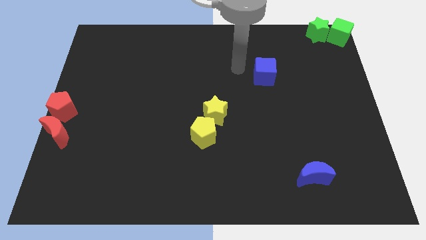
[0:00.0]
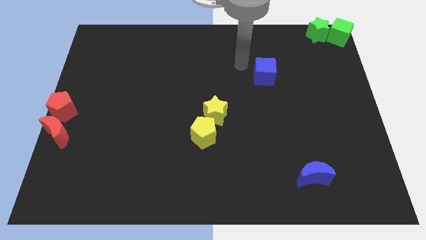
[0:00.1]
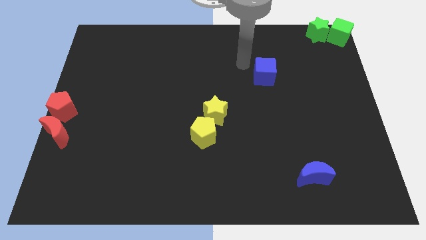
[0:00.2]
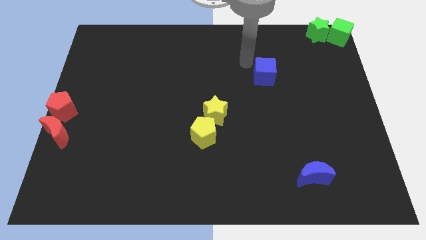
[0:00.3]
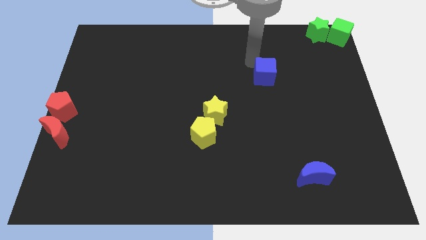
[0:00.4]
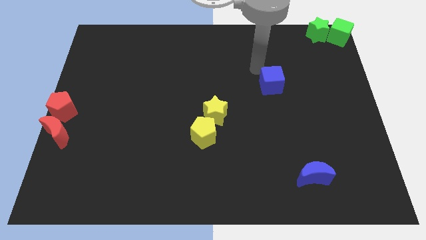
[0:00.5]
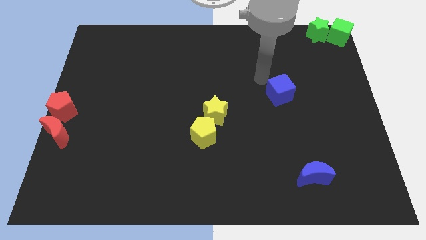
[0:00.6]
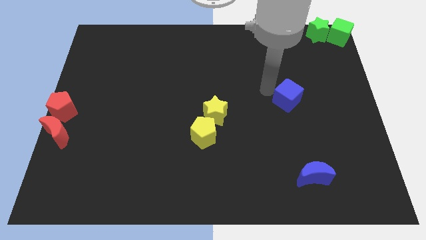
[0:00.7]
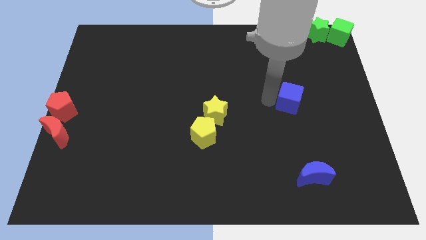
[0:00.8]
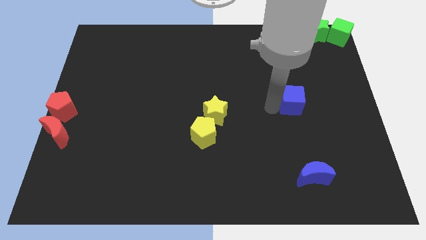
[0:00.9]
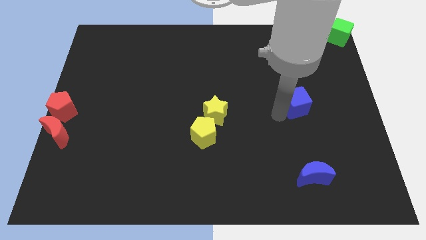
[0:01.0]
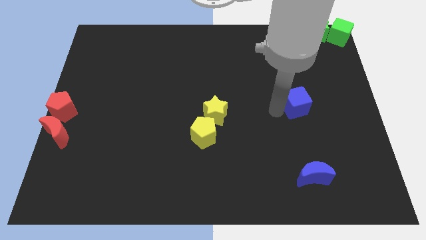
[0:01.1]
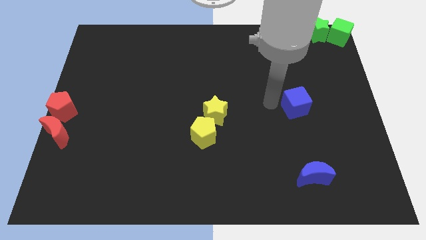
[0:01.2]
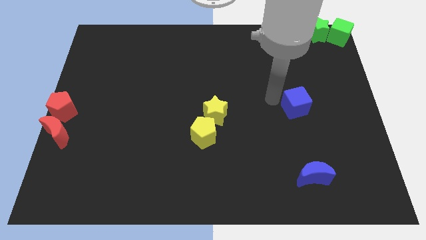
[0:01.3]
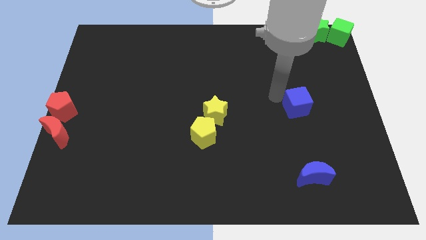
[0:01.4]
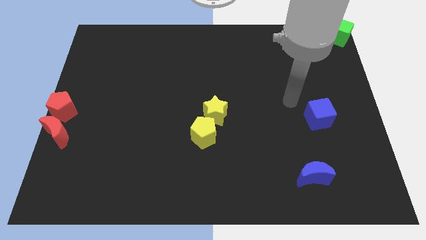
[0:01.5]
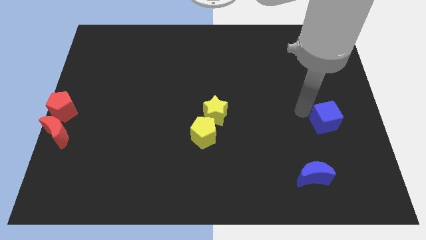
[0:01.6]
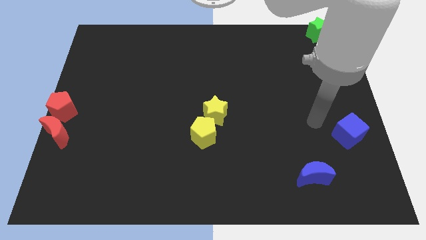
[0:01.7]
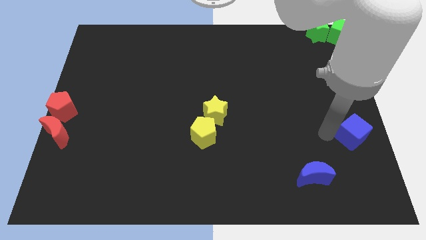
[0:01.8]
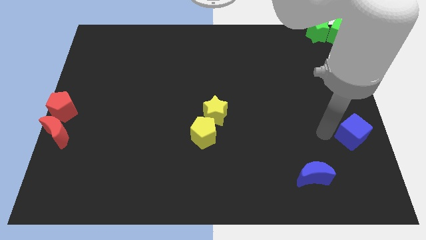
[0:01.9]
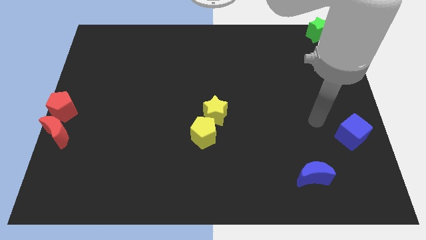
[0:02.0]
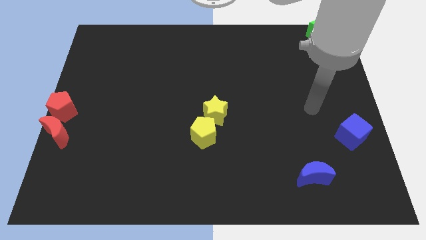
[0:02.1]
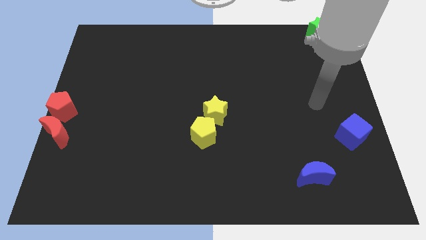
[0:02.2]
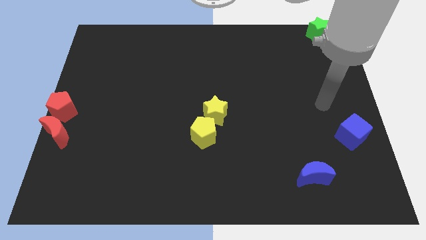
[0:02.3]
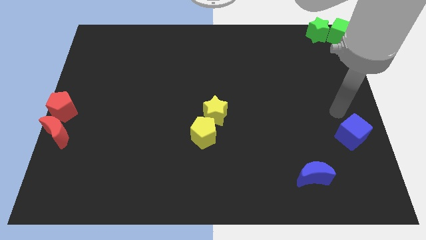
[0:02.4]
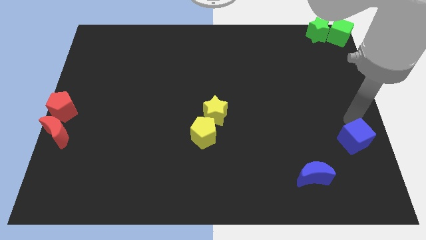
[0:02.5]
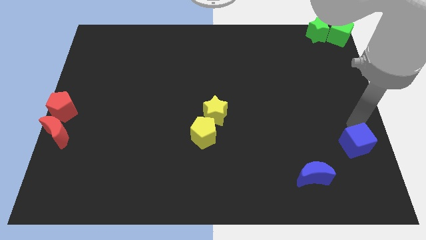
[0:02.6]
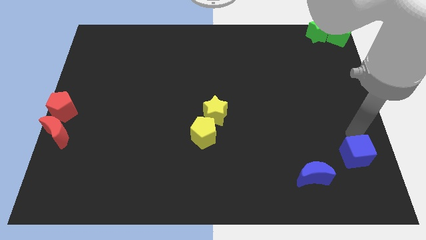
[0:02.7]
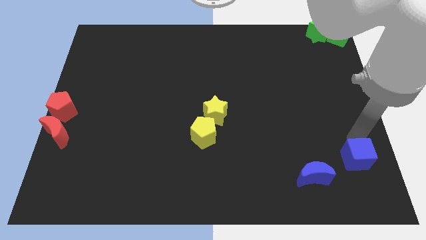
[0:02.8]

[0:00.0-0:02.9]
place the blue cube at the top right side of the blue moon

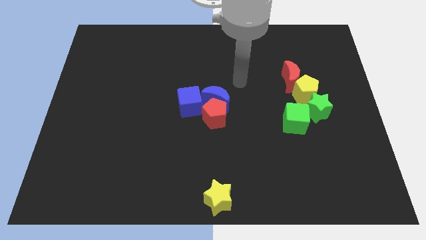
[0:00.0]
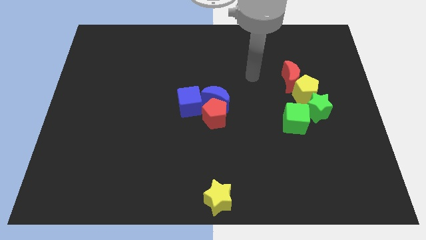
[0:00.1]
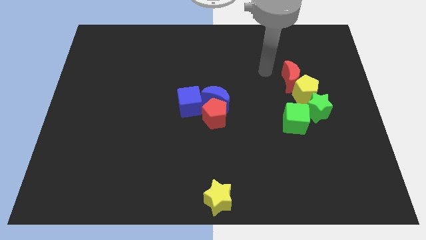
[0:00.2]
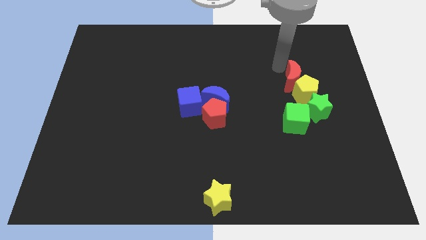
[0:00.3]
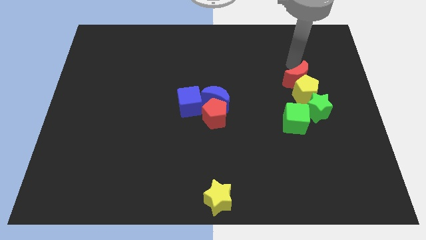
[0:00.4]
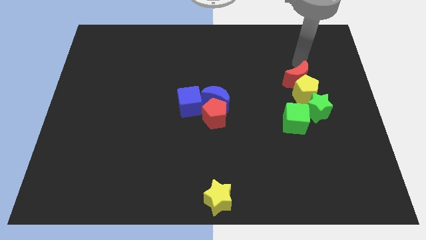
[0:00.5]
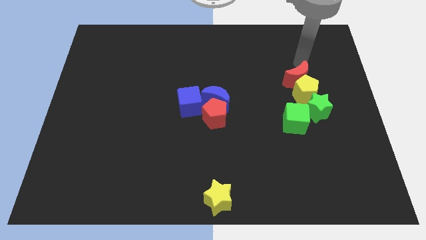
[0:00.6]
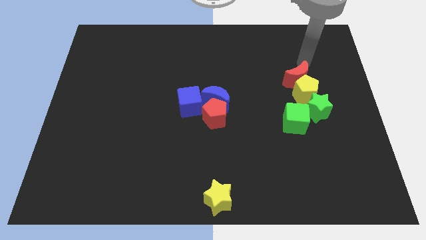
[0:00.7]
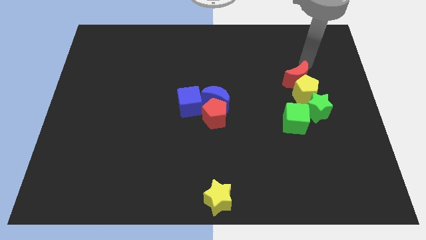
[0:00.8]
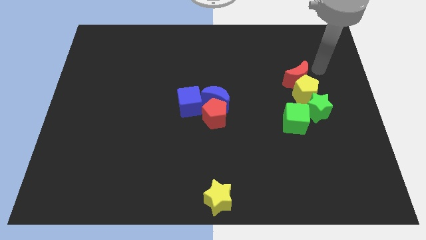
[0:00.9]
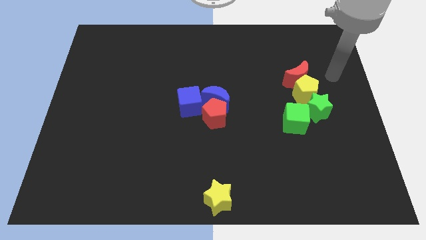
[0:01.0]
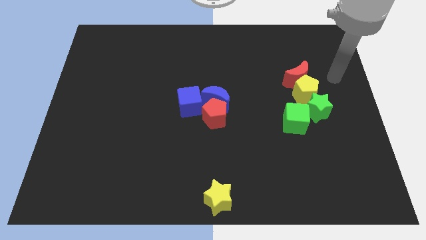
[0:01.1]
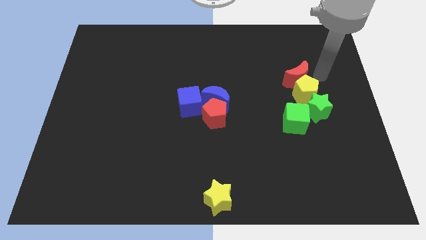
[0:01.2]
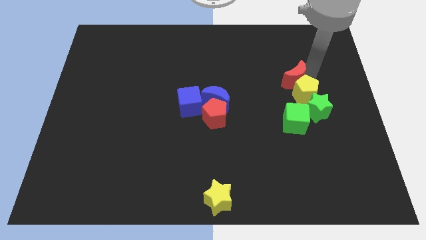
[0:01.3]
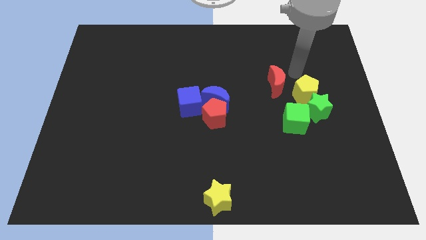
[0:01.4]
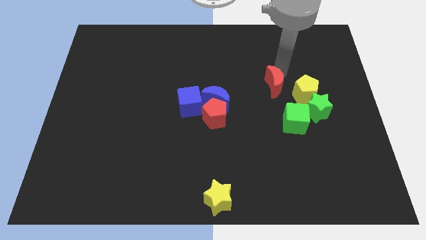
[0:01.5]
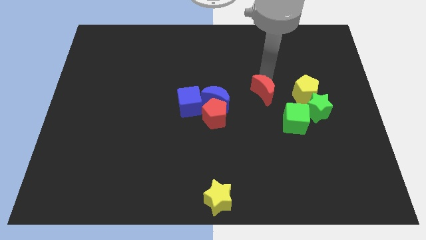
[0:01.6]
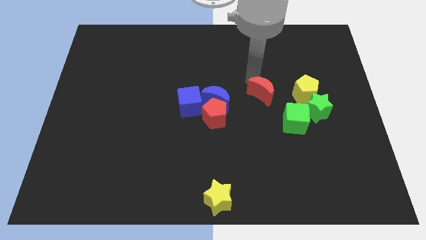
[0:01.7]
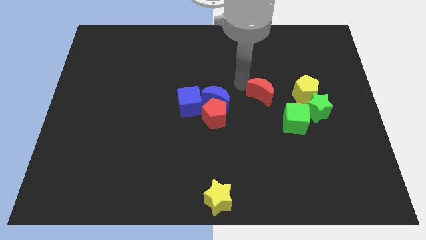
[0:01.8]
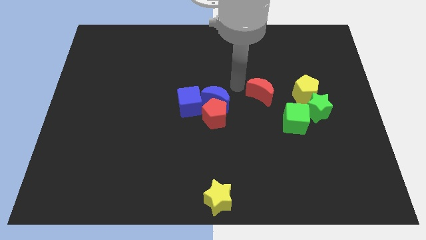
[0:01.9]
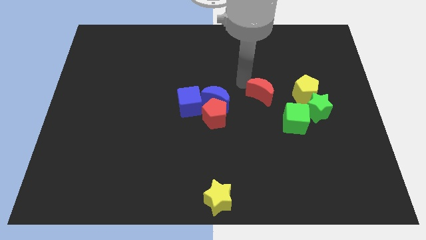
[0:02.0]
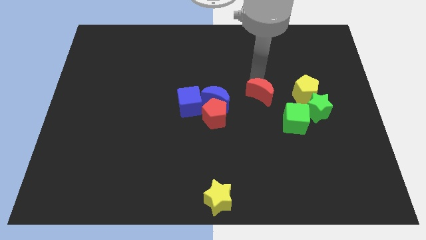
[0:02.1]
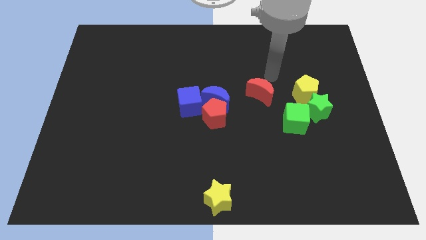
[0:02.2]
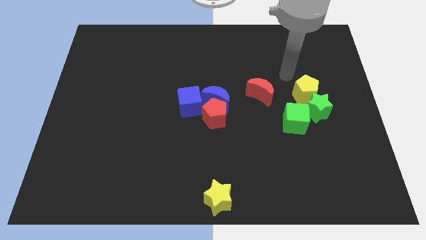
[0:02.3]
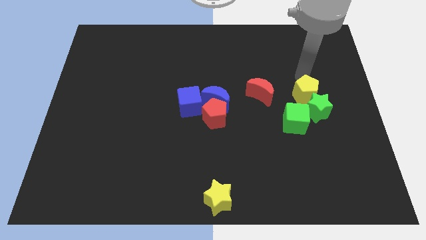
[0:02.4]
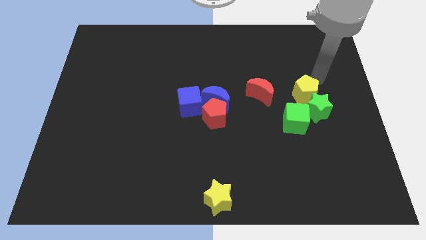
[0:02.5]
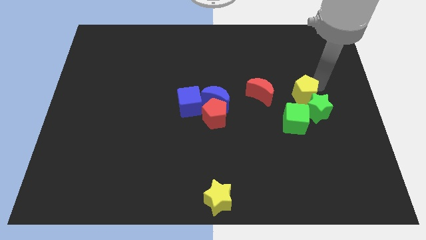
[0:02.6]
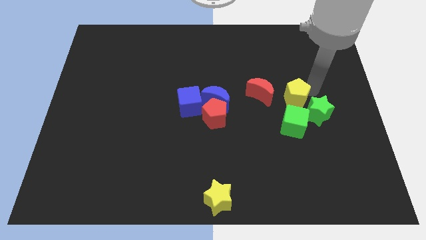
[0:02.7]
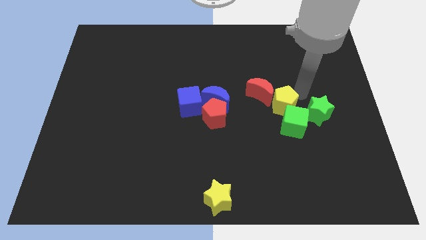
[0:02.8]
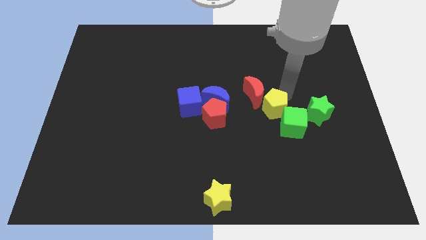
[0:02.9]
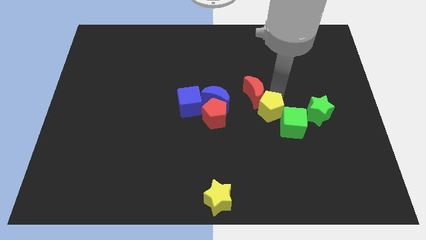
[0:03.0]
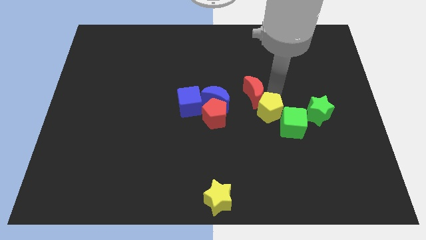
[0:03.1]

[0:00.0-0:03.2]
slide the red moon slightly towards the center

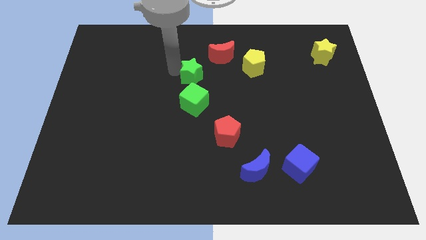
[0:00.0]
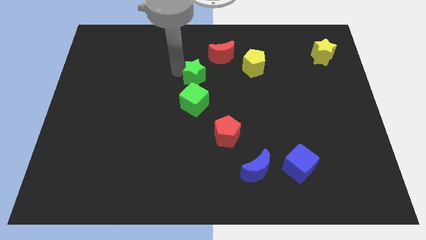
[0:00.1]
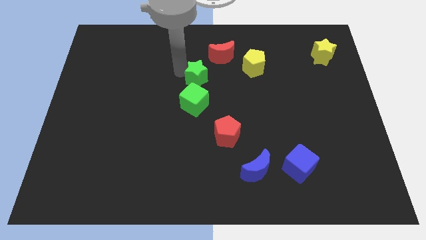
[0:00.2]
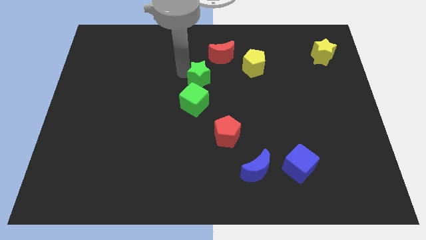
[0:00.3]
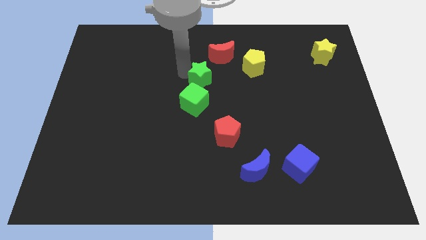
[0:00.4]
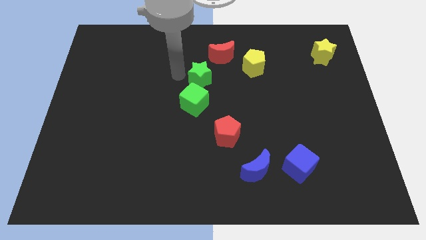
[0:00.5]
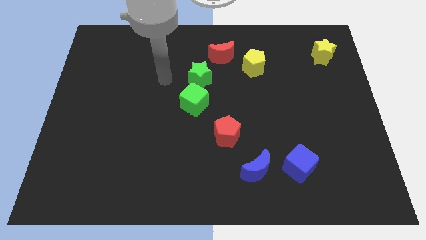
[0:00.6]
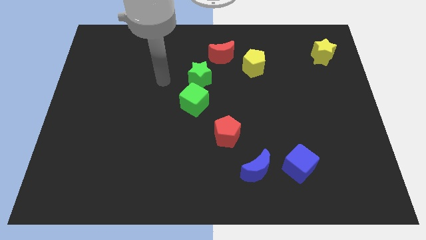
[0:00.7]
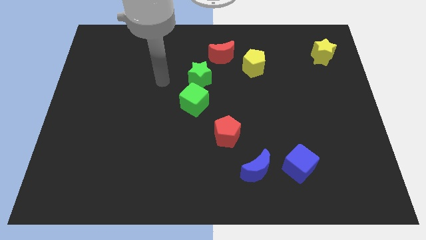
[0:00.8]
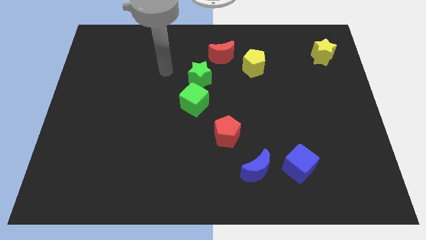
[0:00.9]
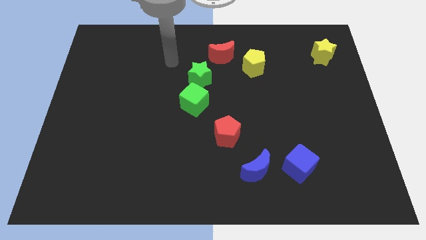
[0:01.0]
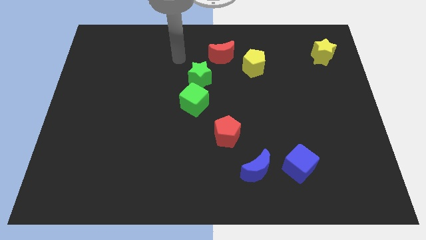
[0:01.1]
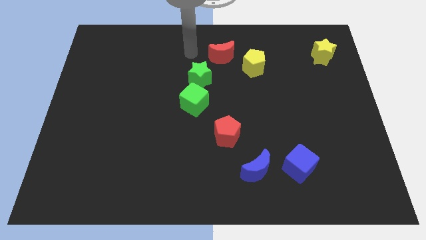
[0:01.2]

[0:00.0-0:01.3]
push the green star to the top right side of the green cube

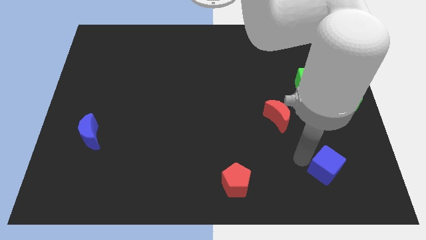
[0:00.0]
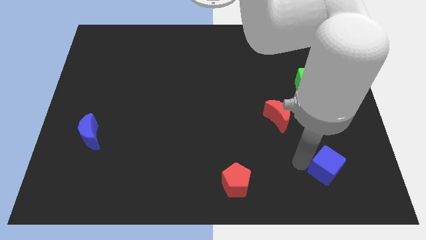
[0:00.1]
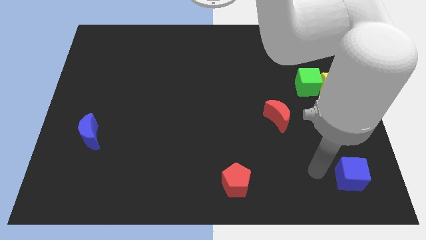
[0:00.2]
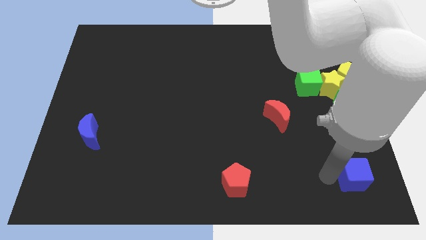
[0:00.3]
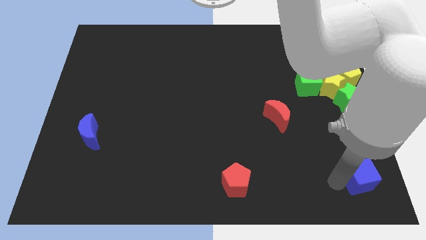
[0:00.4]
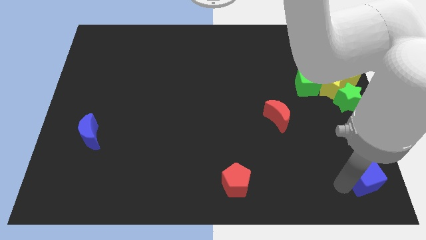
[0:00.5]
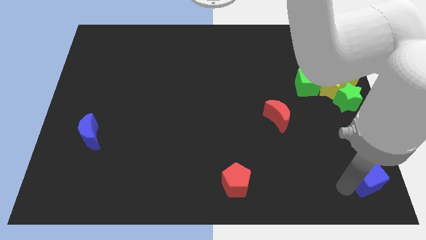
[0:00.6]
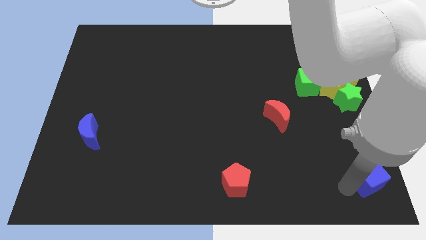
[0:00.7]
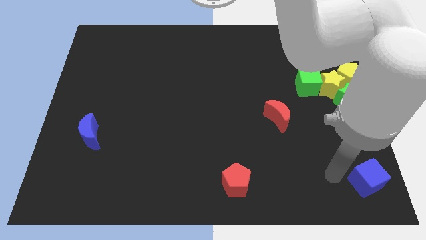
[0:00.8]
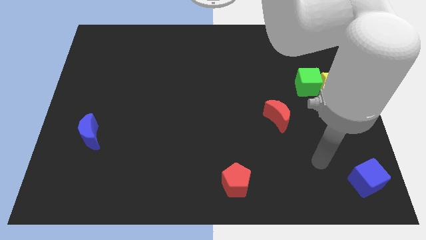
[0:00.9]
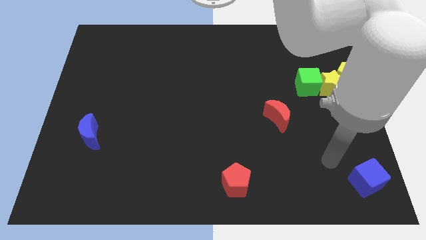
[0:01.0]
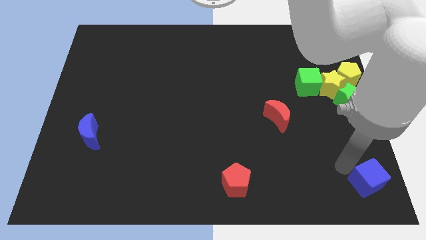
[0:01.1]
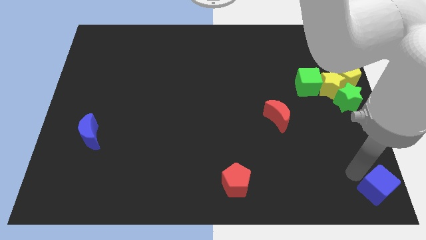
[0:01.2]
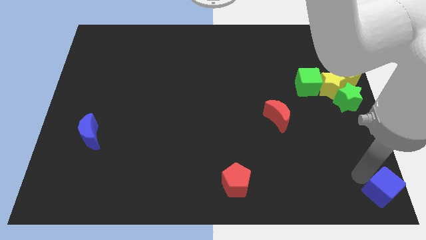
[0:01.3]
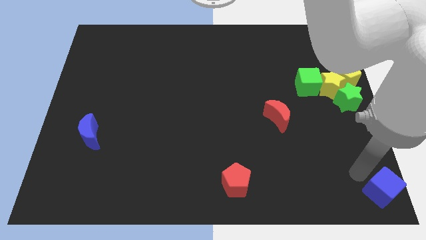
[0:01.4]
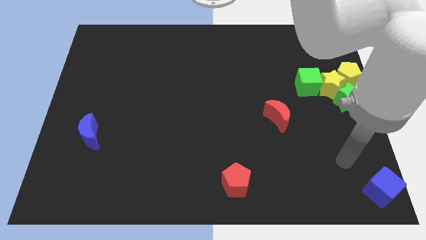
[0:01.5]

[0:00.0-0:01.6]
place the blue cube to the bottom right side of the board

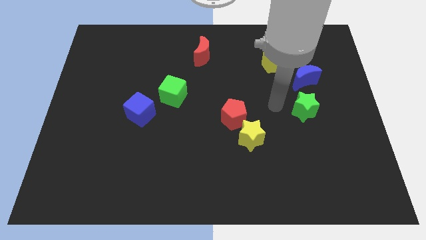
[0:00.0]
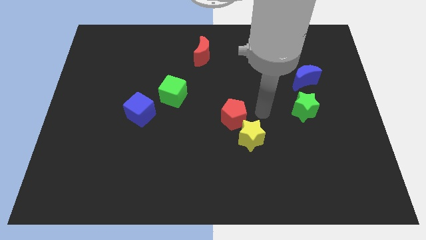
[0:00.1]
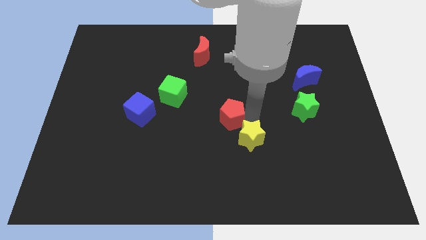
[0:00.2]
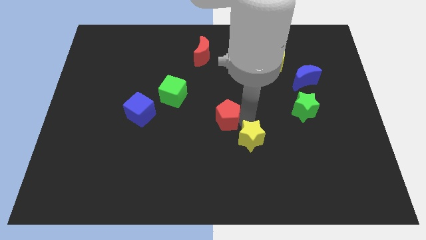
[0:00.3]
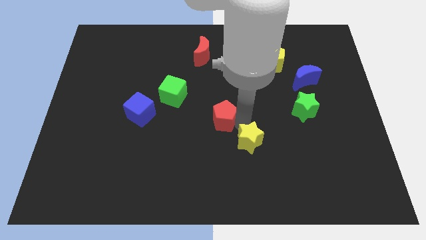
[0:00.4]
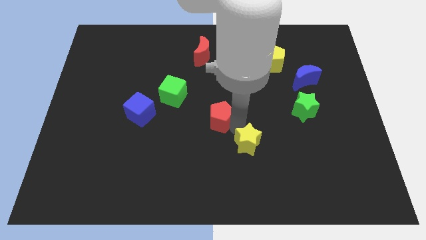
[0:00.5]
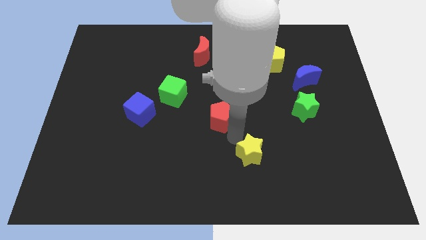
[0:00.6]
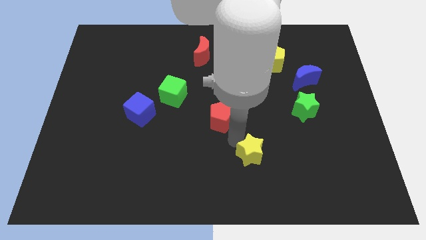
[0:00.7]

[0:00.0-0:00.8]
separate the red pentagon and yellow star from each other
